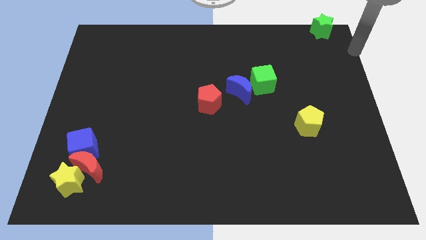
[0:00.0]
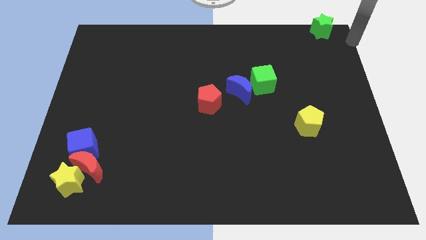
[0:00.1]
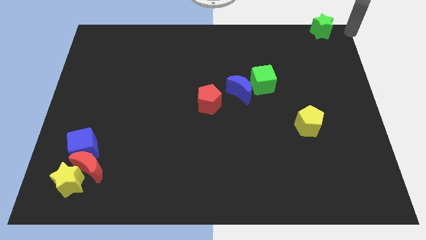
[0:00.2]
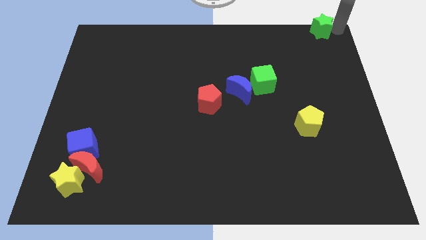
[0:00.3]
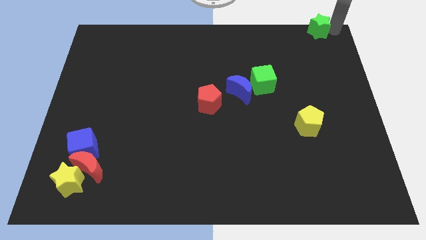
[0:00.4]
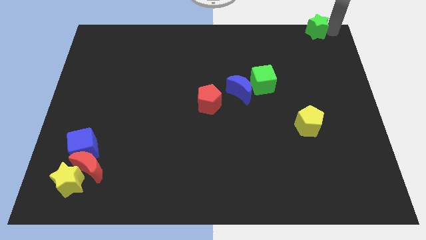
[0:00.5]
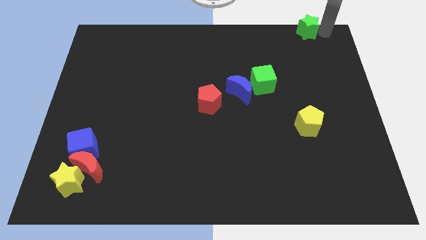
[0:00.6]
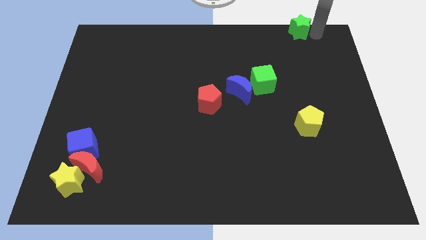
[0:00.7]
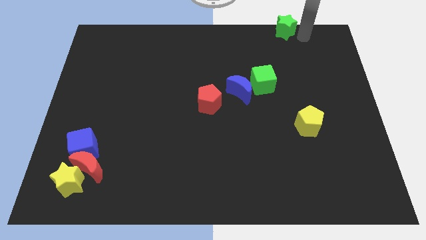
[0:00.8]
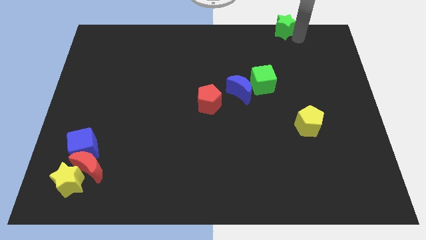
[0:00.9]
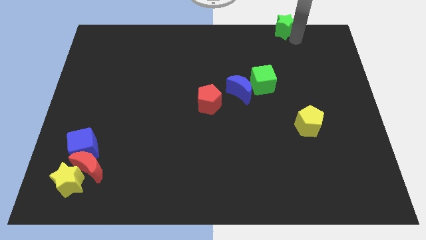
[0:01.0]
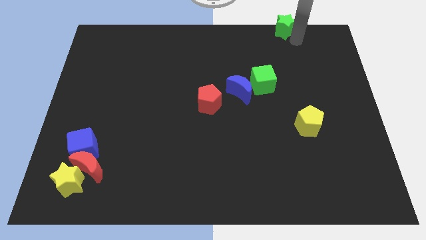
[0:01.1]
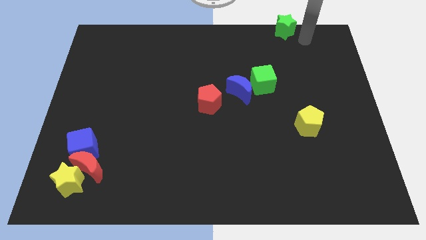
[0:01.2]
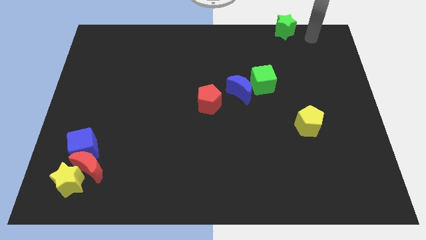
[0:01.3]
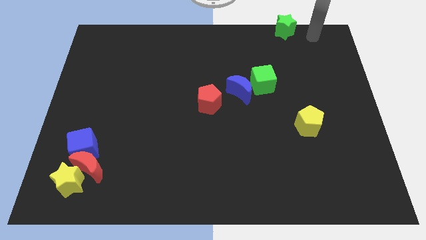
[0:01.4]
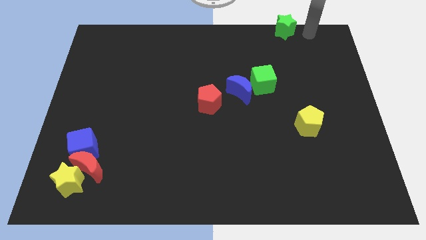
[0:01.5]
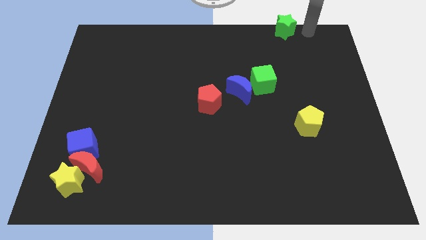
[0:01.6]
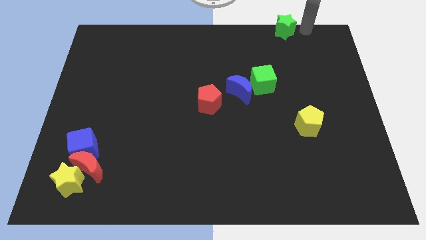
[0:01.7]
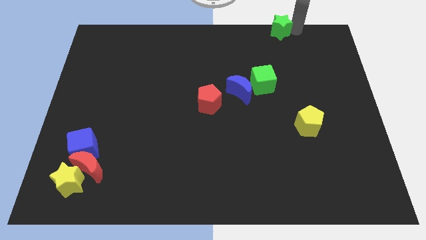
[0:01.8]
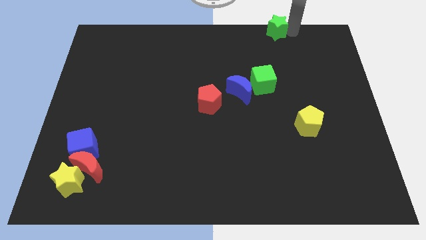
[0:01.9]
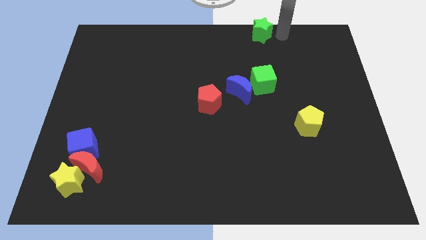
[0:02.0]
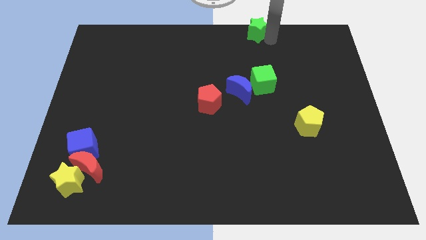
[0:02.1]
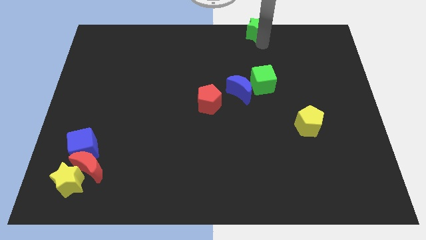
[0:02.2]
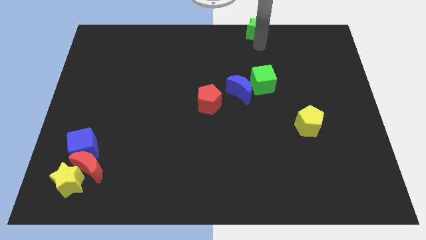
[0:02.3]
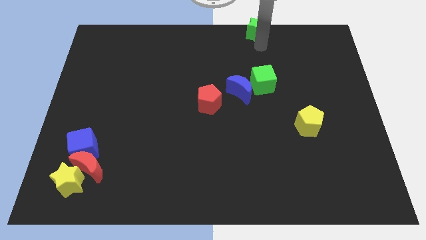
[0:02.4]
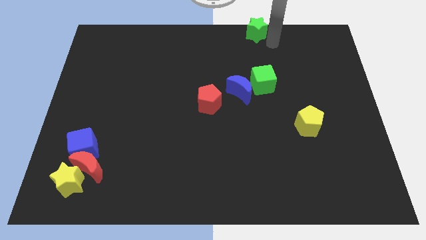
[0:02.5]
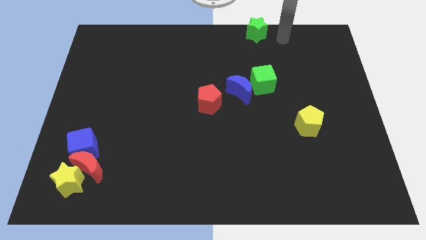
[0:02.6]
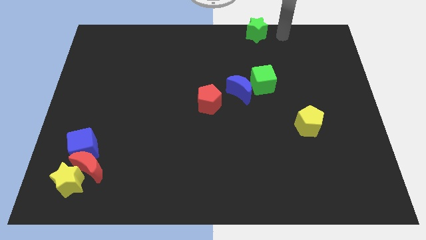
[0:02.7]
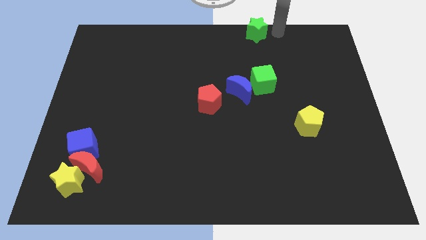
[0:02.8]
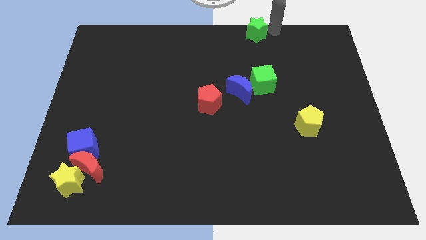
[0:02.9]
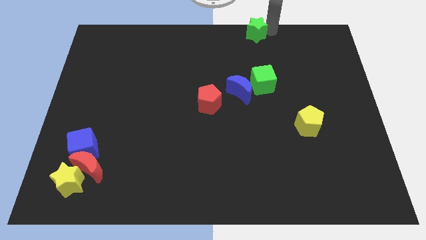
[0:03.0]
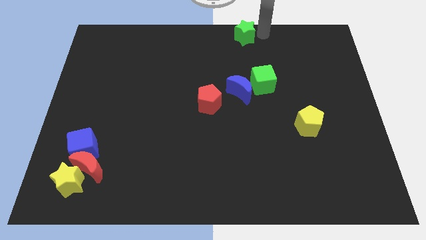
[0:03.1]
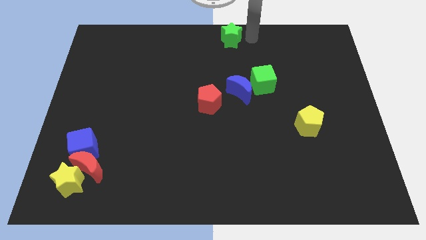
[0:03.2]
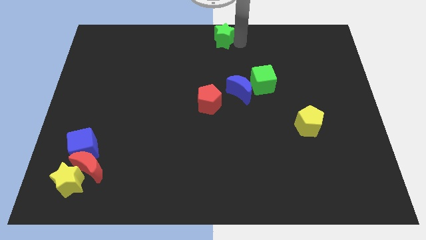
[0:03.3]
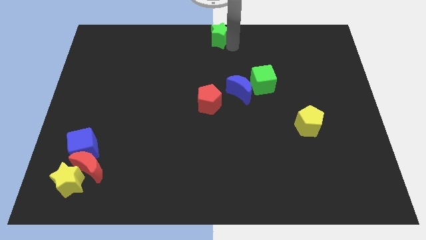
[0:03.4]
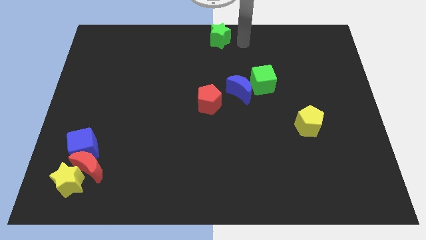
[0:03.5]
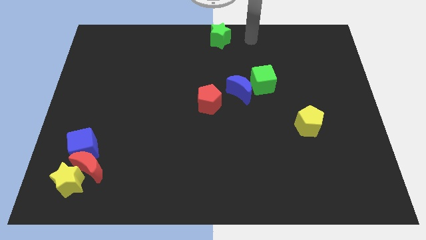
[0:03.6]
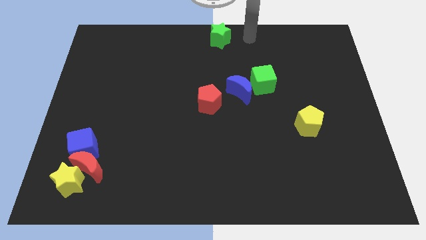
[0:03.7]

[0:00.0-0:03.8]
place the green star above the blue moon

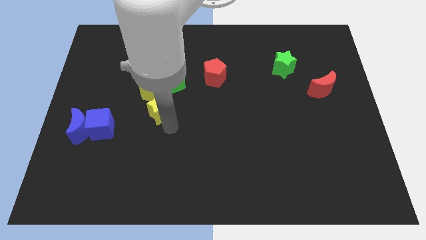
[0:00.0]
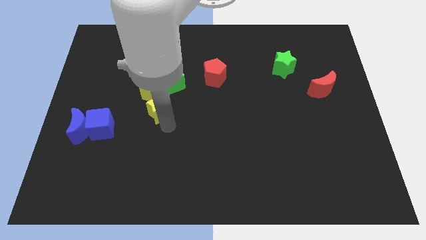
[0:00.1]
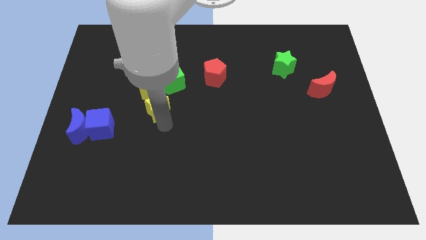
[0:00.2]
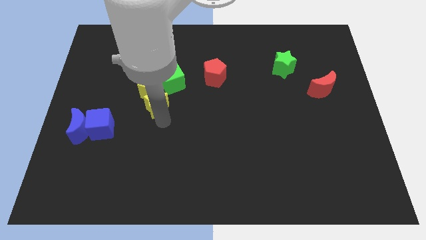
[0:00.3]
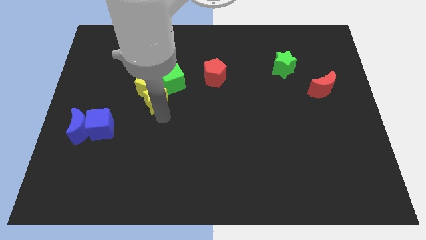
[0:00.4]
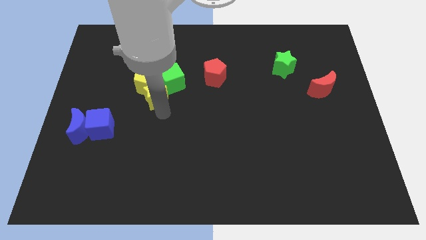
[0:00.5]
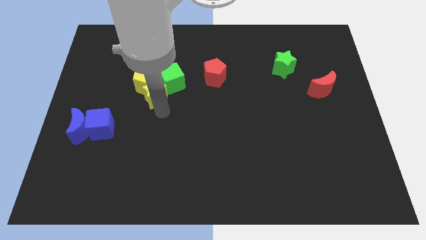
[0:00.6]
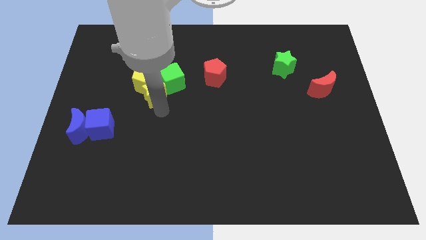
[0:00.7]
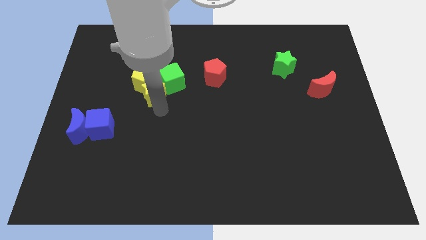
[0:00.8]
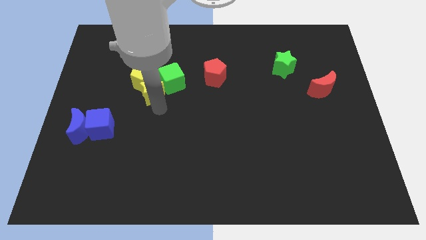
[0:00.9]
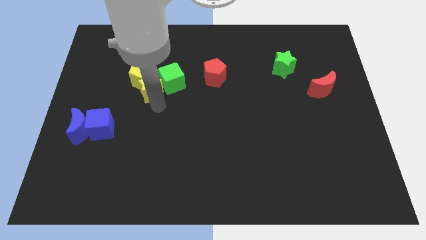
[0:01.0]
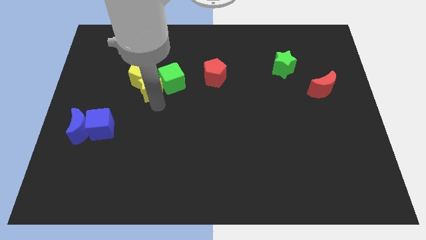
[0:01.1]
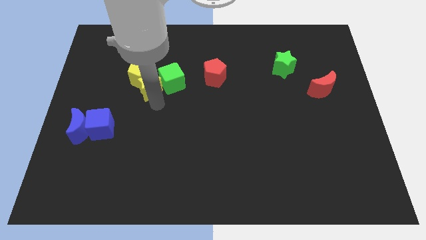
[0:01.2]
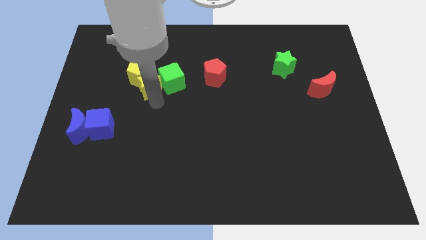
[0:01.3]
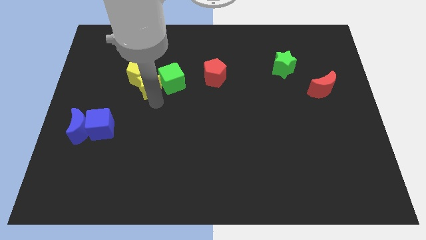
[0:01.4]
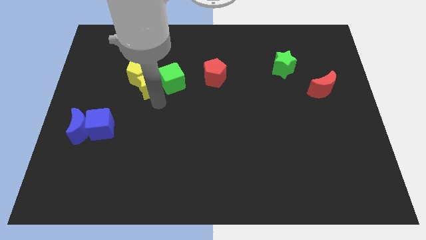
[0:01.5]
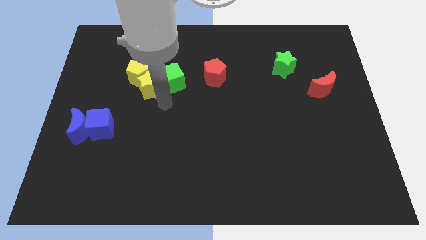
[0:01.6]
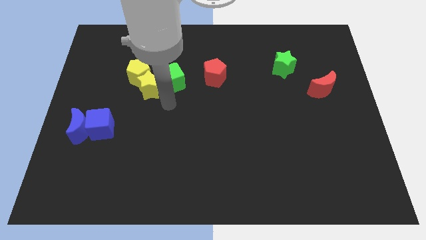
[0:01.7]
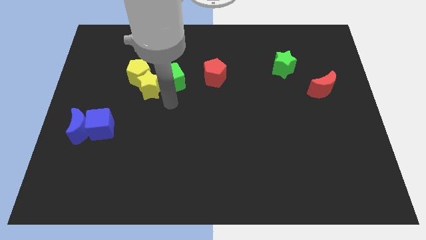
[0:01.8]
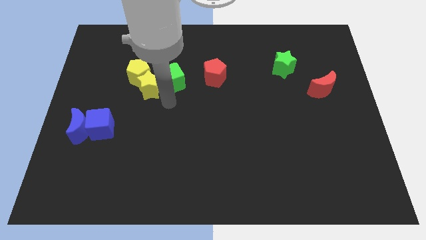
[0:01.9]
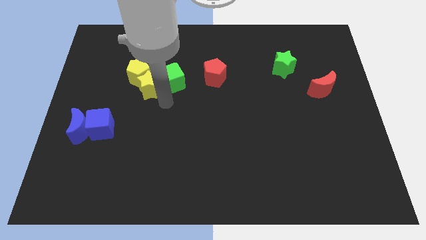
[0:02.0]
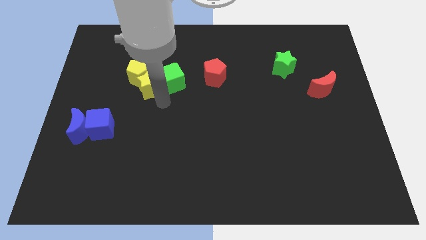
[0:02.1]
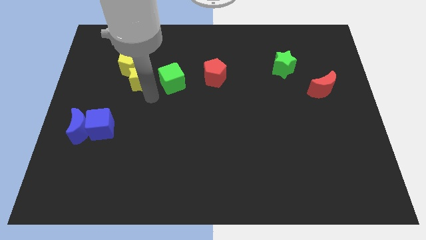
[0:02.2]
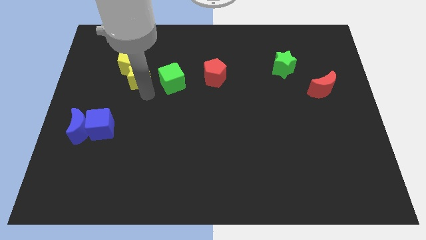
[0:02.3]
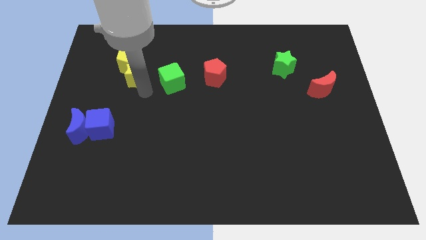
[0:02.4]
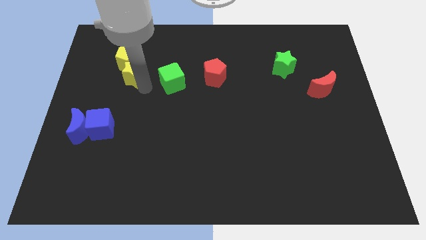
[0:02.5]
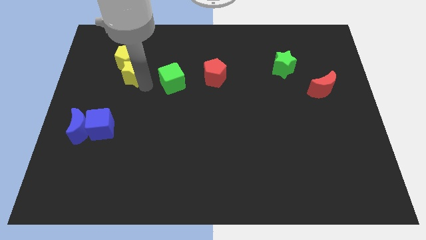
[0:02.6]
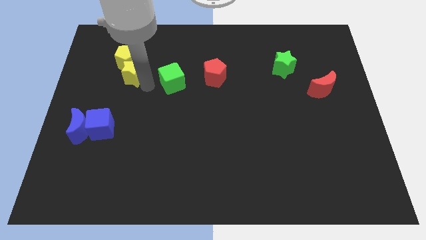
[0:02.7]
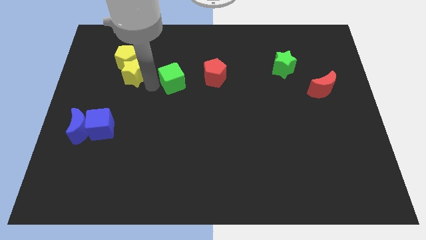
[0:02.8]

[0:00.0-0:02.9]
push the yellow blocks towards top leftt side of the board

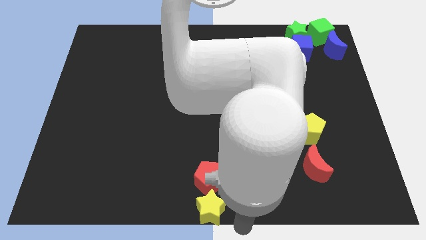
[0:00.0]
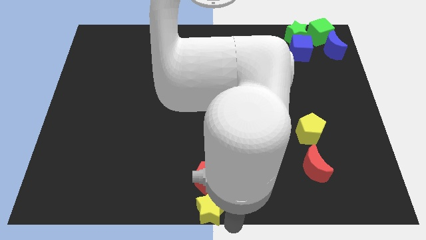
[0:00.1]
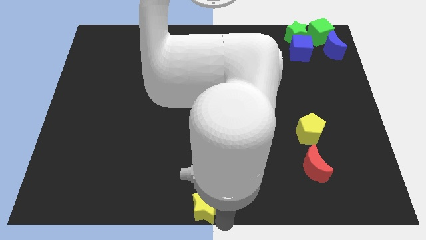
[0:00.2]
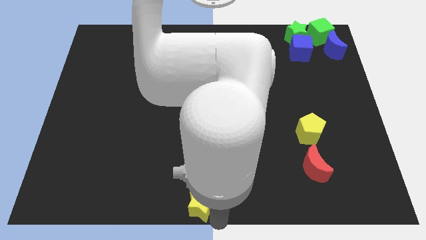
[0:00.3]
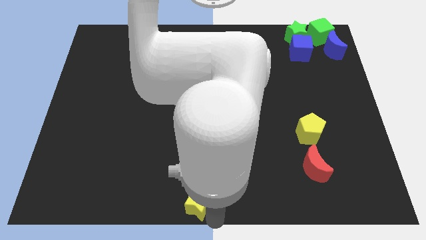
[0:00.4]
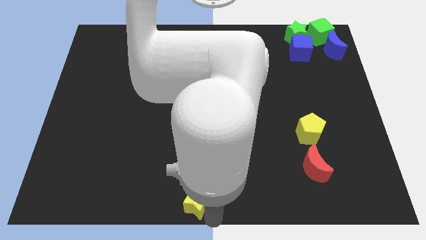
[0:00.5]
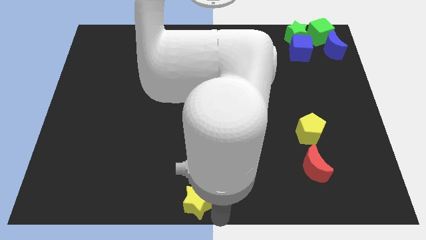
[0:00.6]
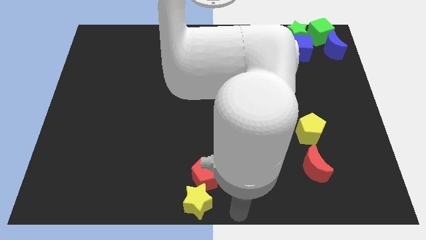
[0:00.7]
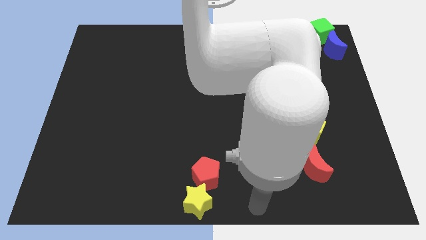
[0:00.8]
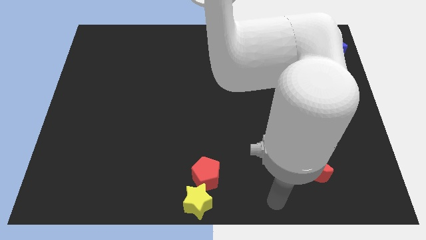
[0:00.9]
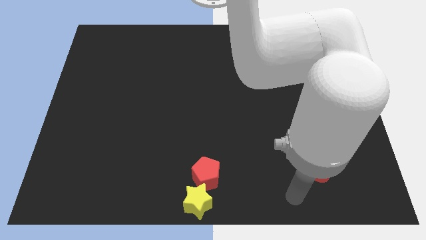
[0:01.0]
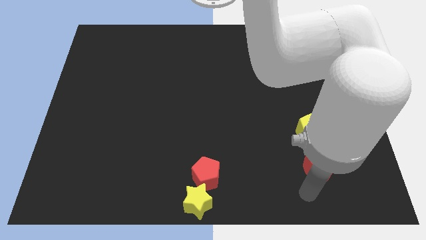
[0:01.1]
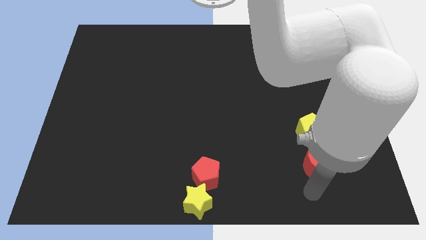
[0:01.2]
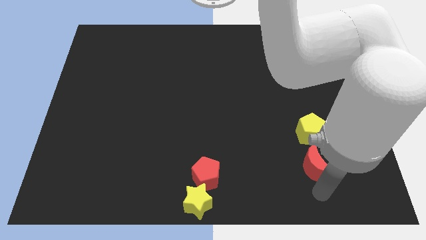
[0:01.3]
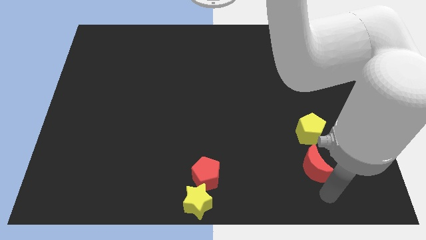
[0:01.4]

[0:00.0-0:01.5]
place your arm below red moon

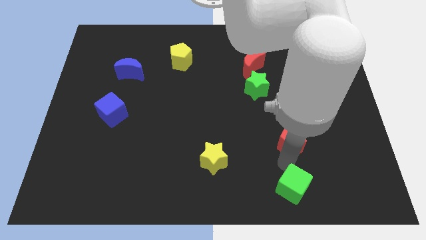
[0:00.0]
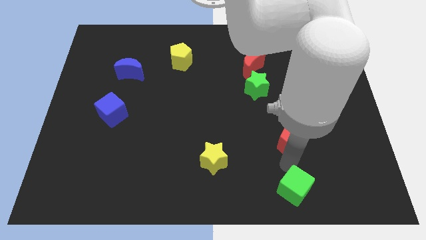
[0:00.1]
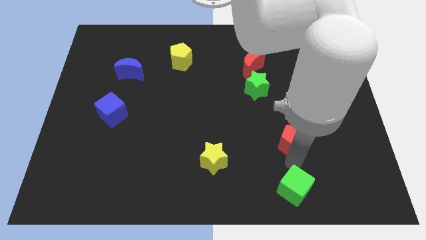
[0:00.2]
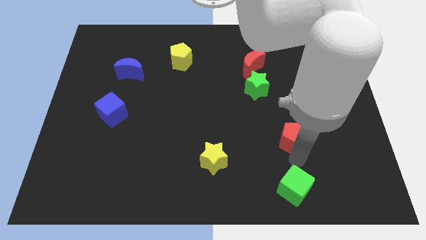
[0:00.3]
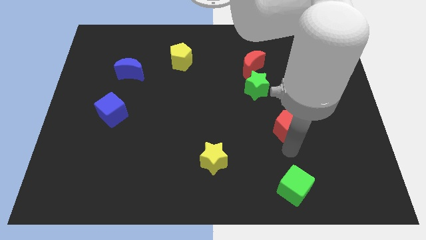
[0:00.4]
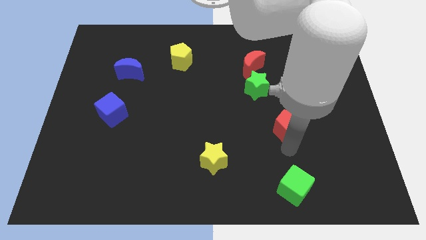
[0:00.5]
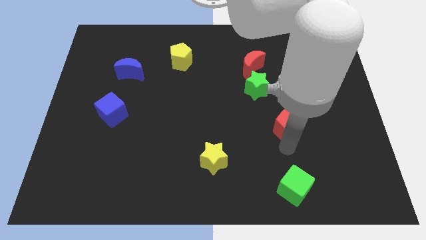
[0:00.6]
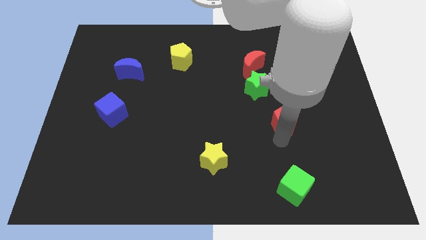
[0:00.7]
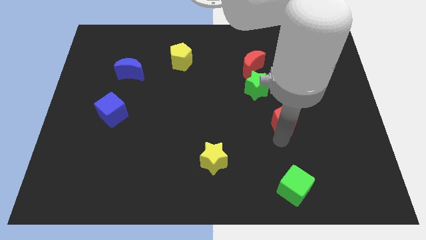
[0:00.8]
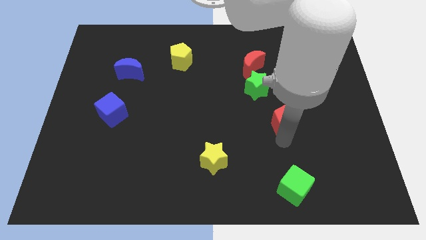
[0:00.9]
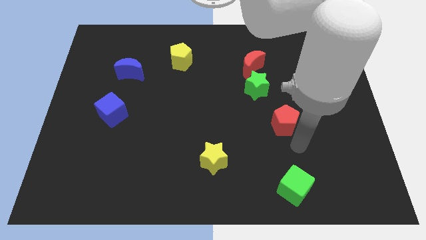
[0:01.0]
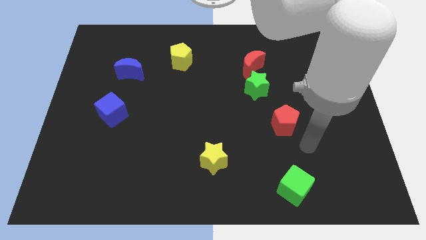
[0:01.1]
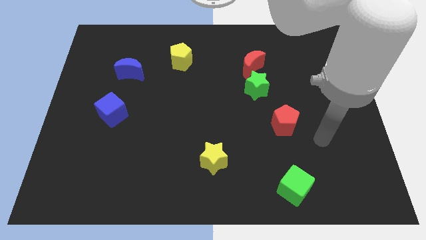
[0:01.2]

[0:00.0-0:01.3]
move the red pentagon slightly to the top
